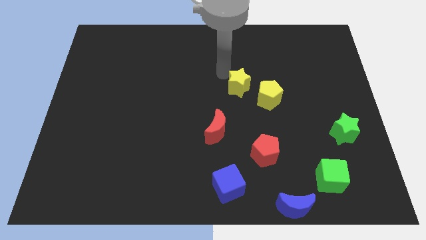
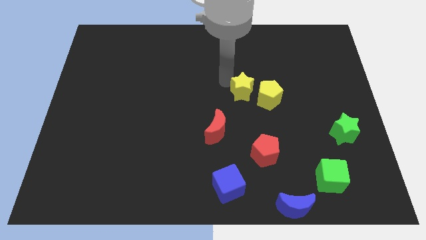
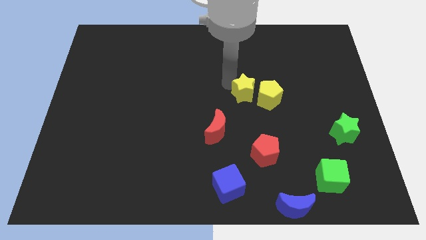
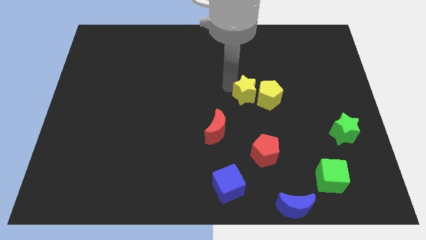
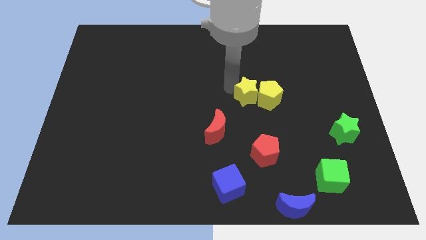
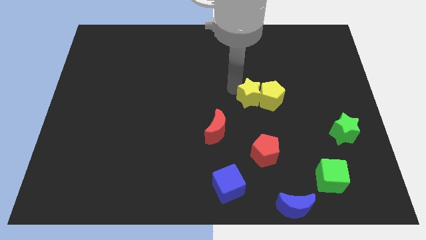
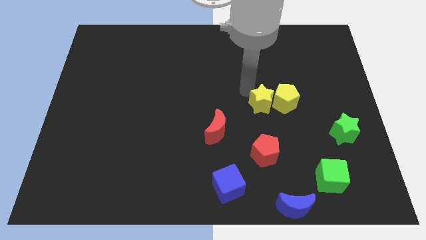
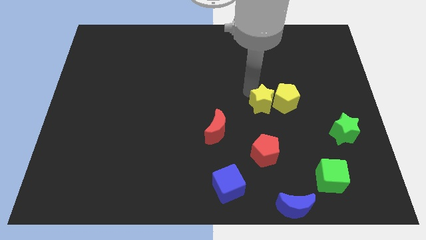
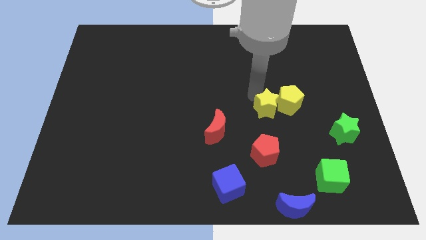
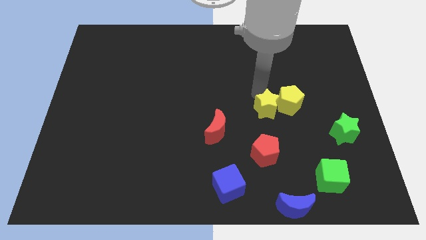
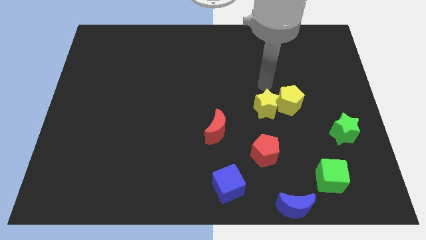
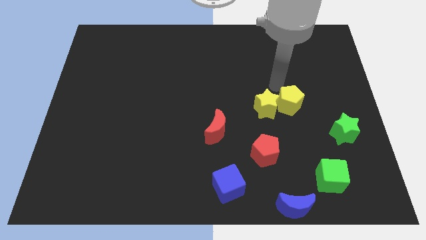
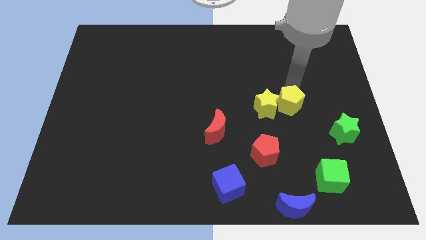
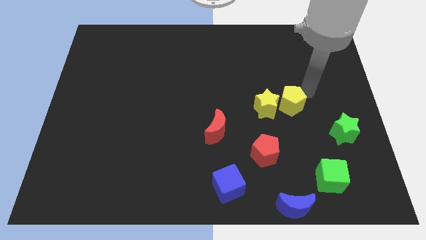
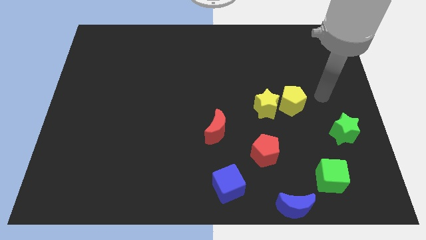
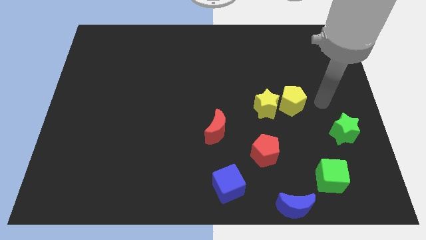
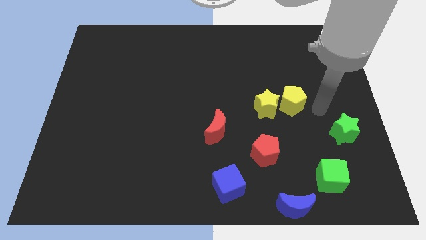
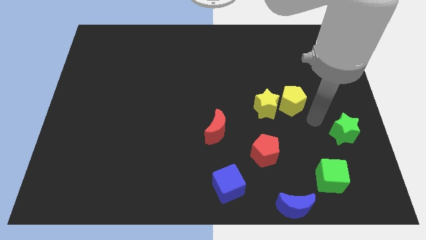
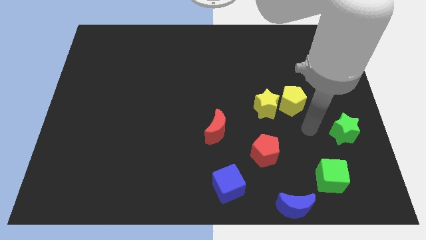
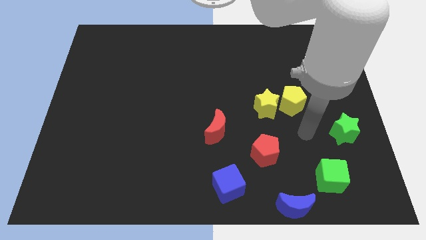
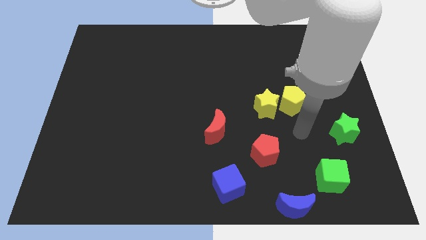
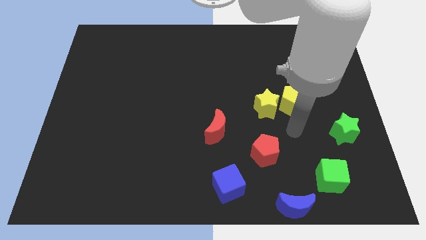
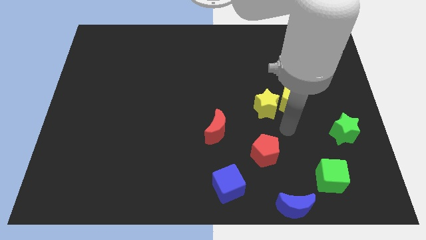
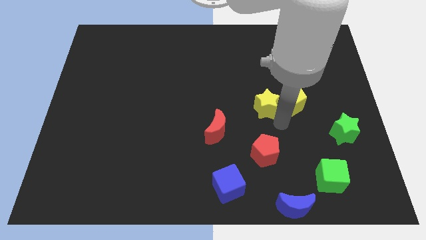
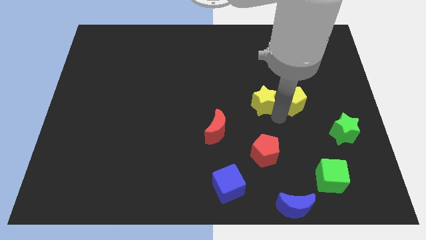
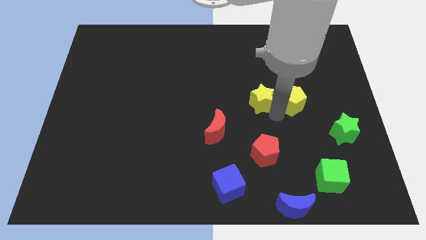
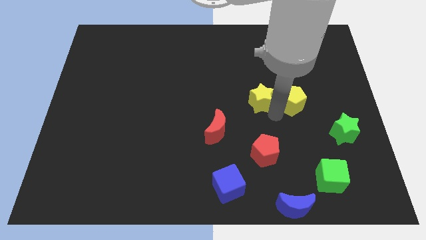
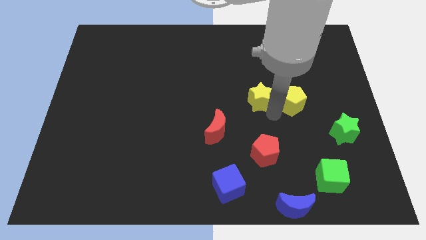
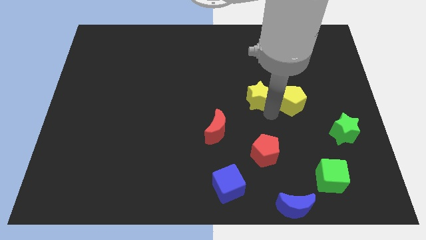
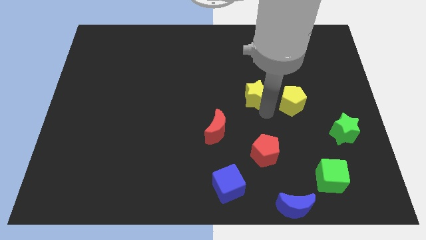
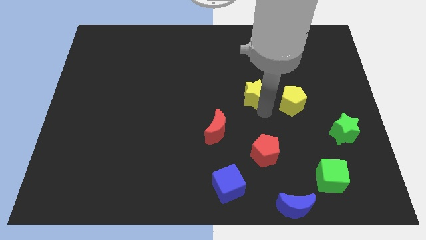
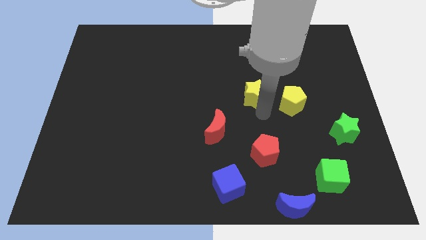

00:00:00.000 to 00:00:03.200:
separate the yellow star away from the yellow pentagon

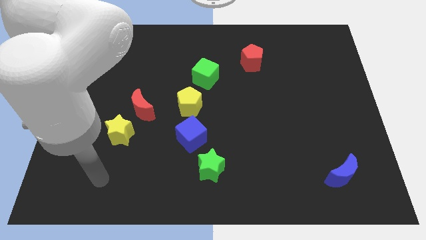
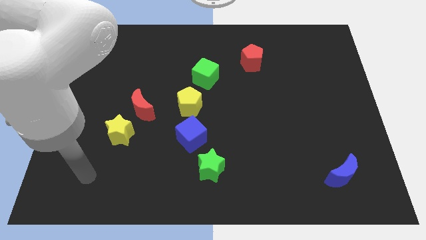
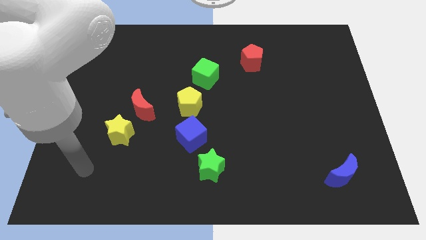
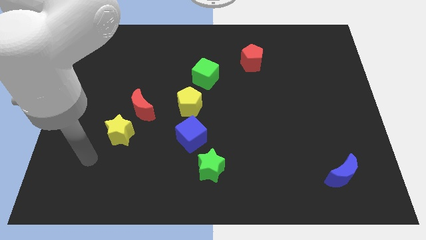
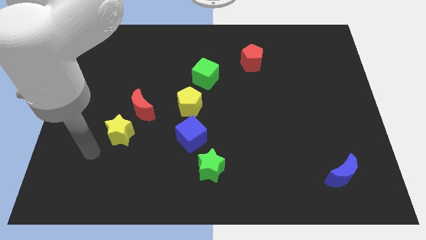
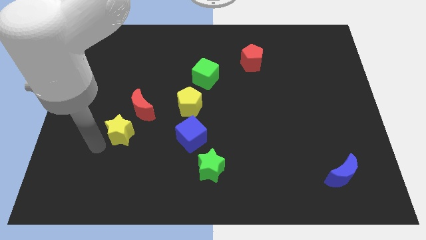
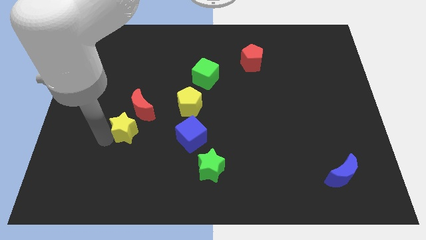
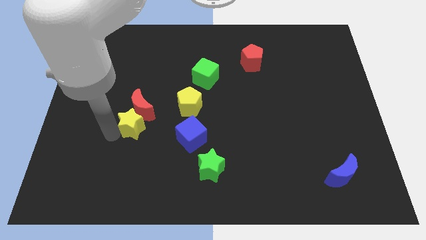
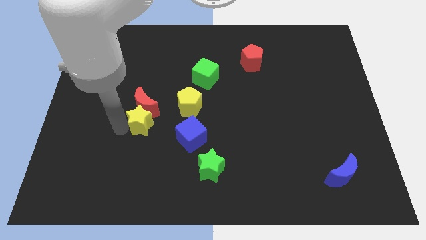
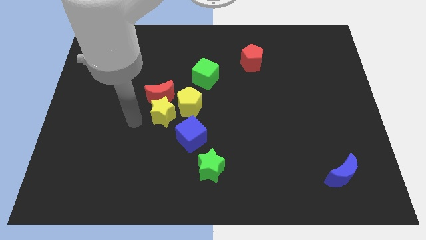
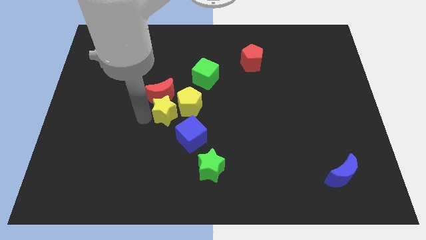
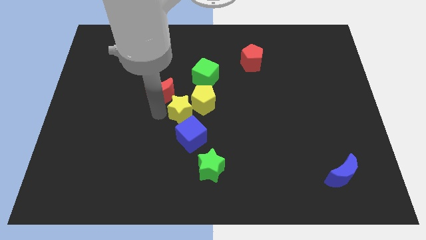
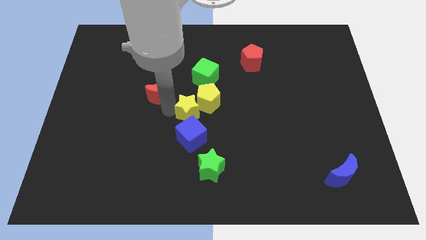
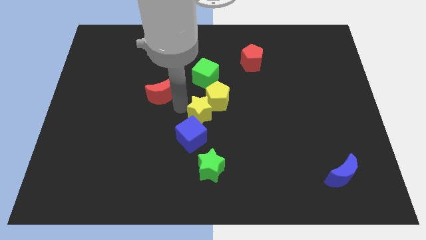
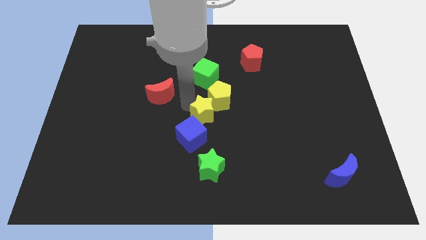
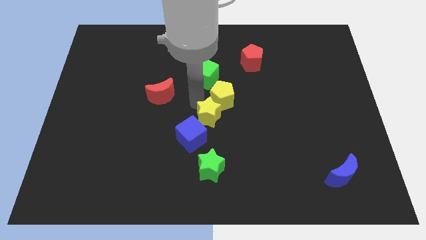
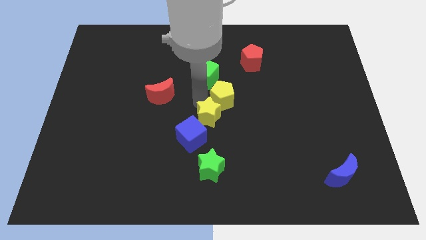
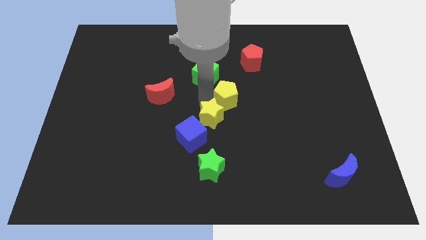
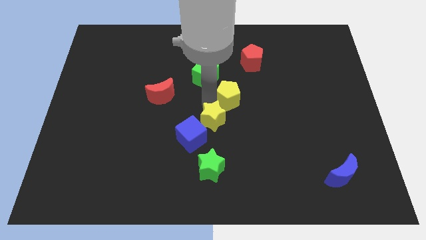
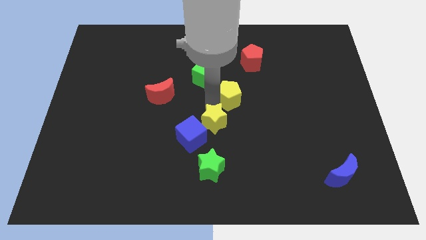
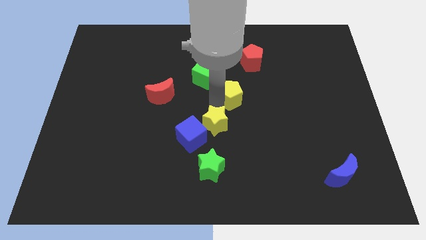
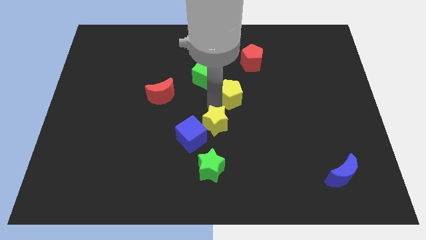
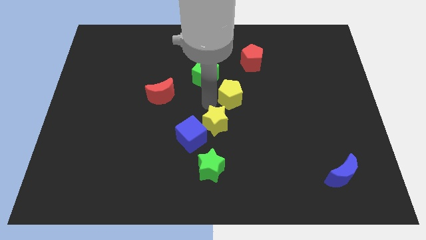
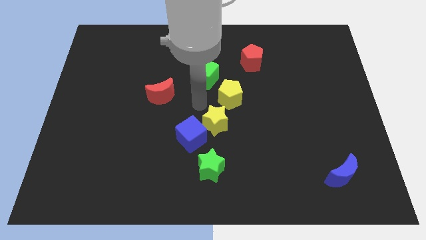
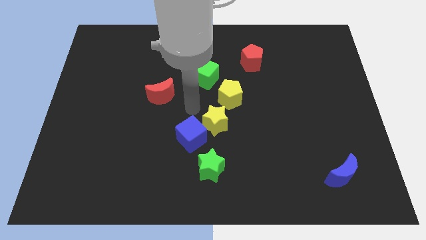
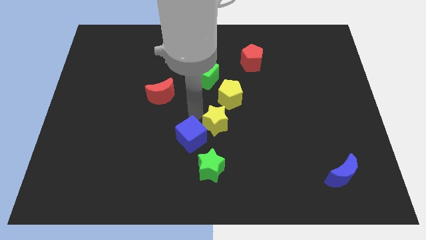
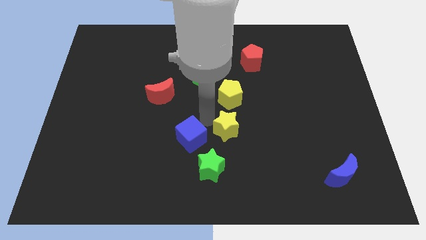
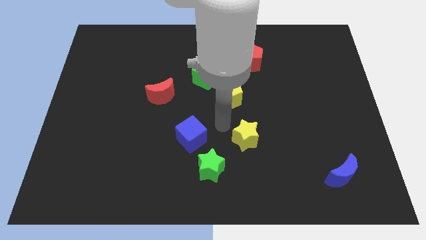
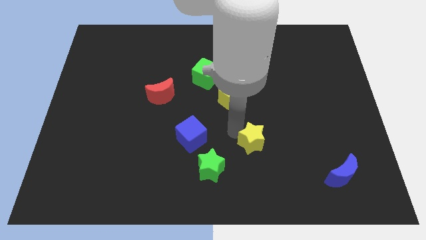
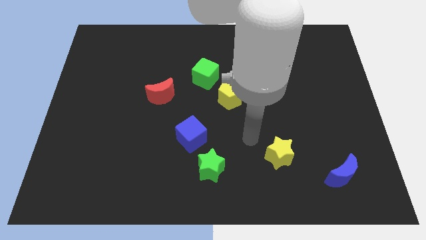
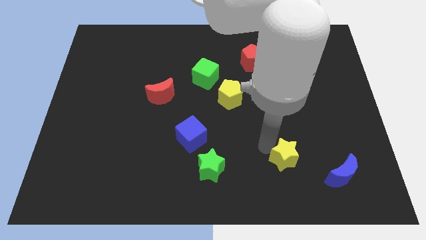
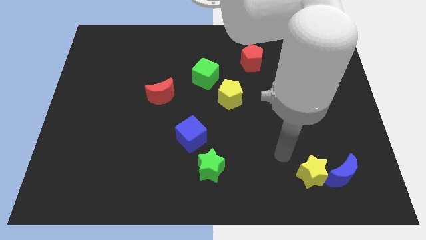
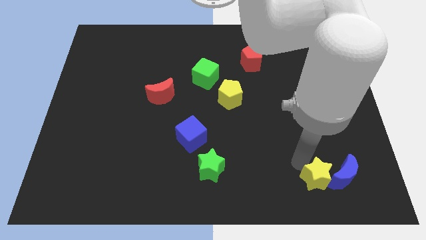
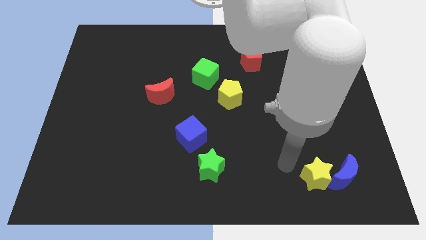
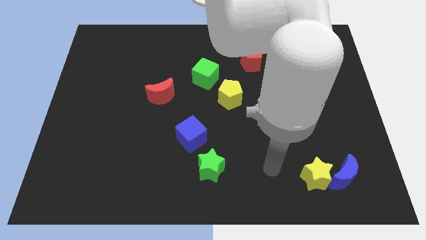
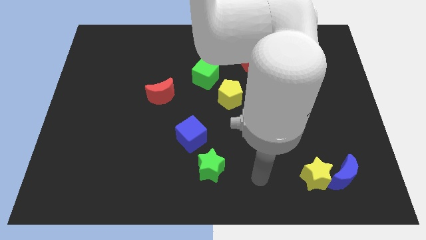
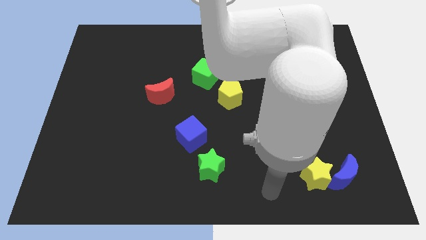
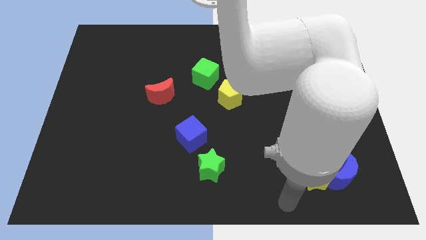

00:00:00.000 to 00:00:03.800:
move yellow star to the left of blue moon

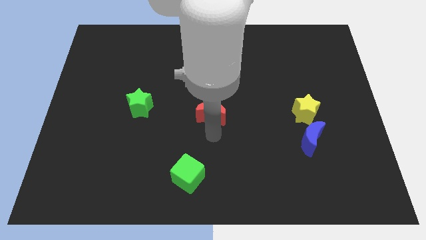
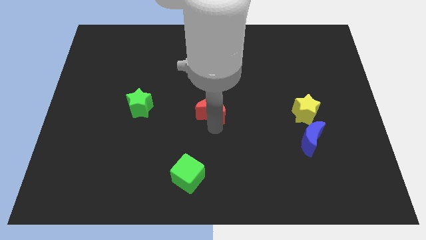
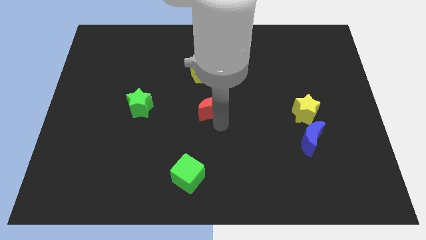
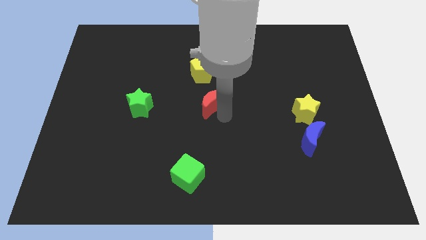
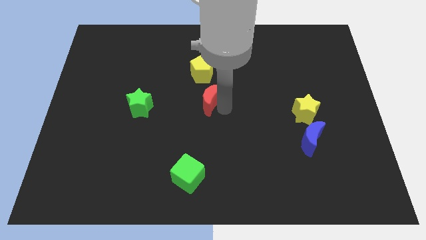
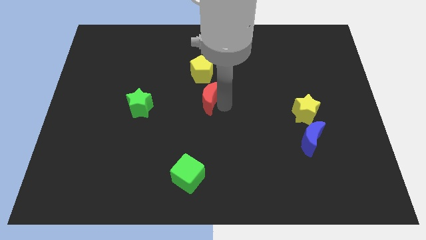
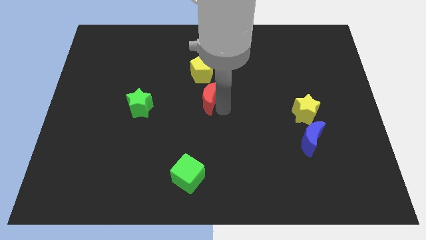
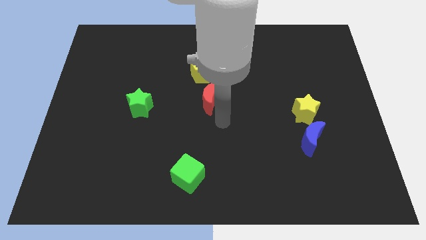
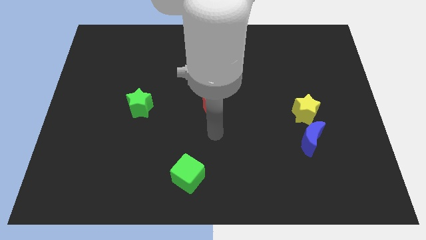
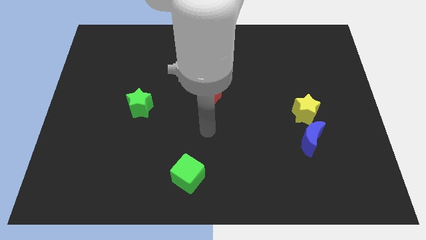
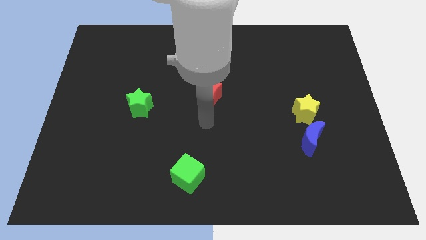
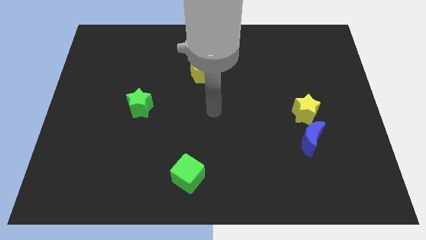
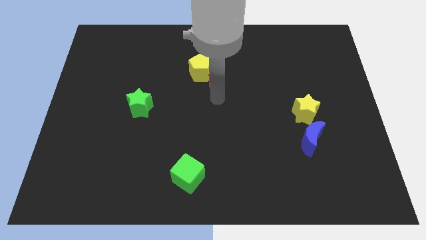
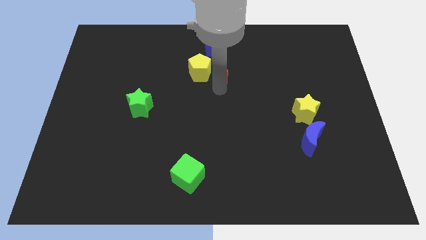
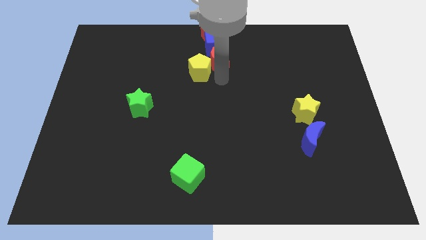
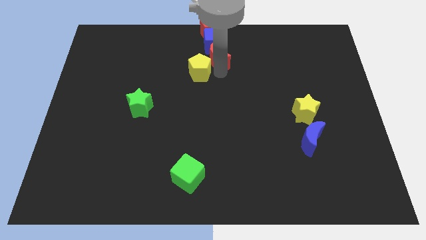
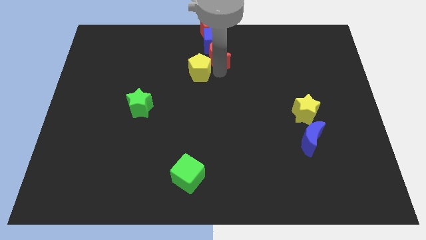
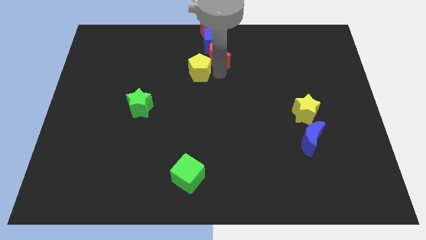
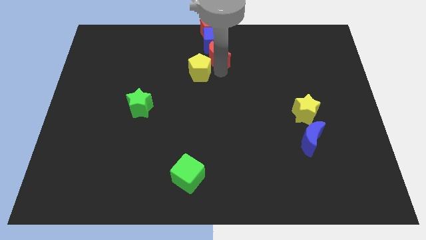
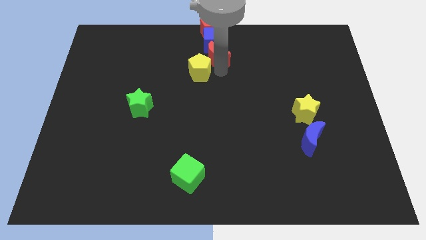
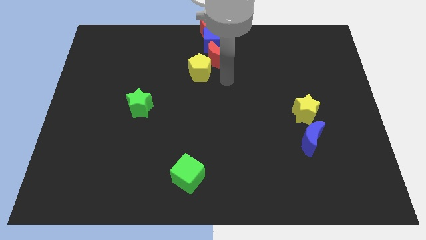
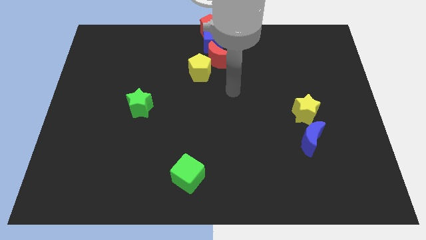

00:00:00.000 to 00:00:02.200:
push the red moon below into blue cube
